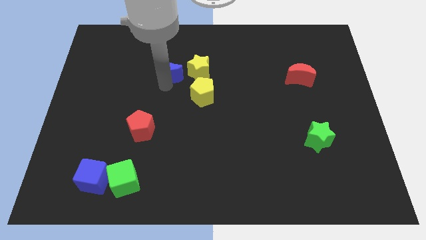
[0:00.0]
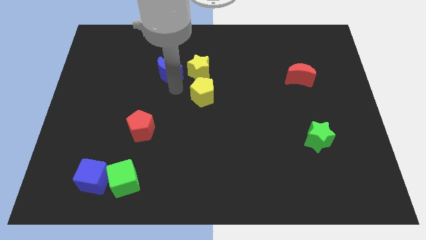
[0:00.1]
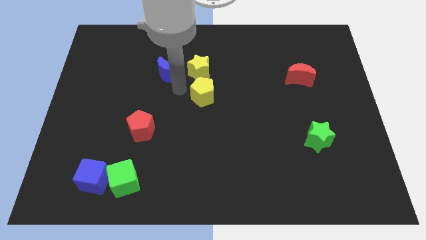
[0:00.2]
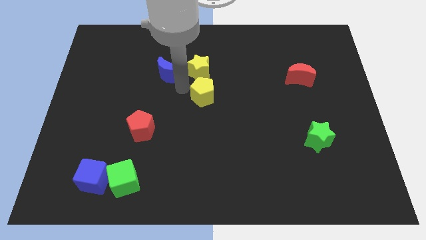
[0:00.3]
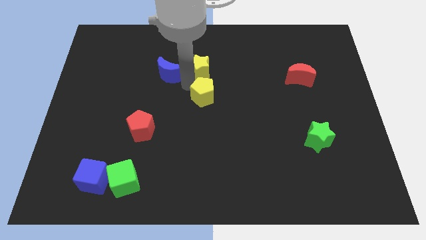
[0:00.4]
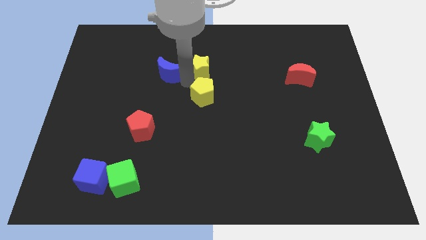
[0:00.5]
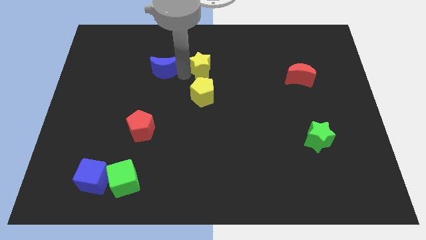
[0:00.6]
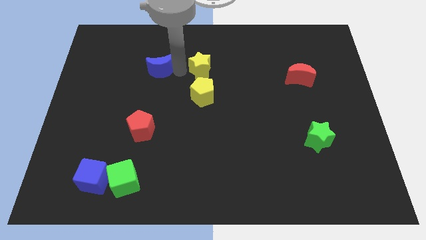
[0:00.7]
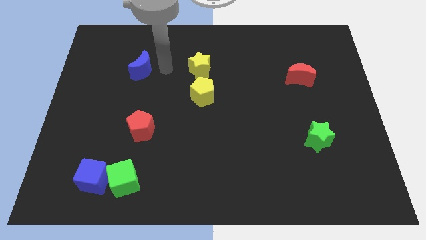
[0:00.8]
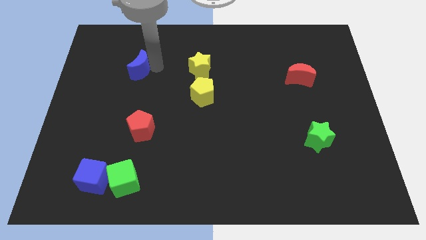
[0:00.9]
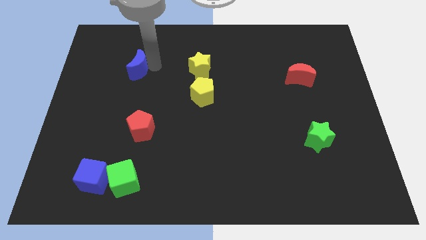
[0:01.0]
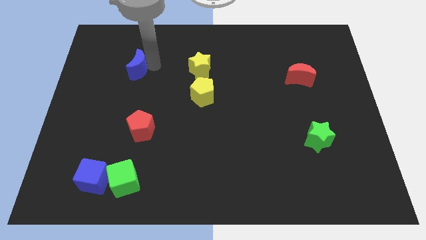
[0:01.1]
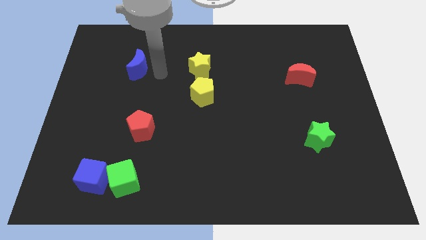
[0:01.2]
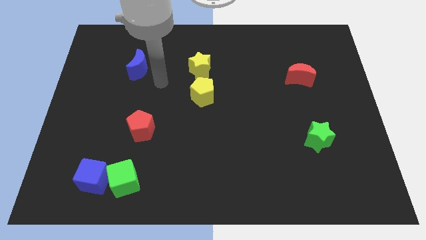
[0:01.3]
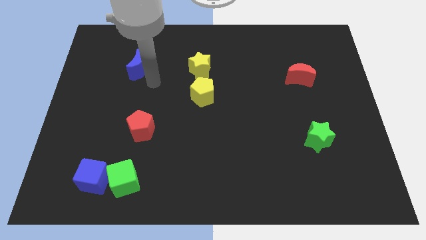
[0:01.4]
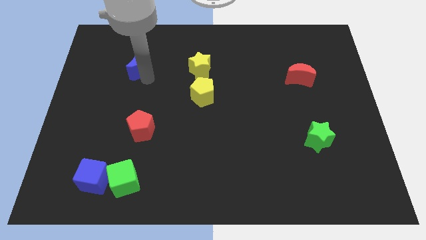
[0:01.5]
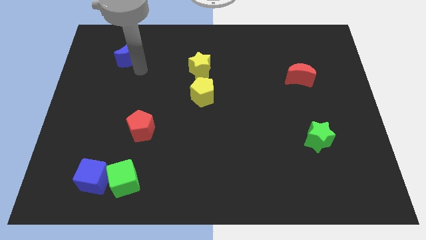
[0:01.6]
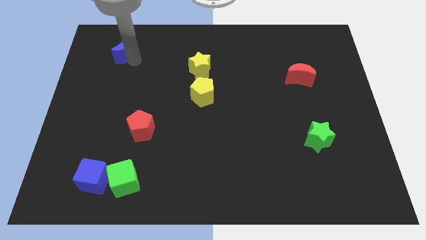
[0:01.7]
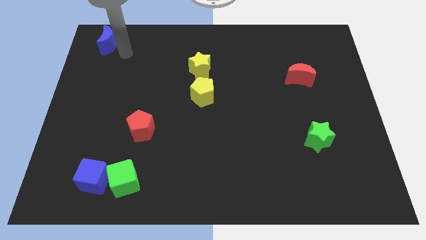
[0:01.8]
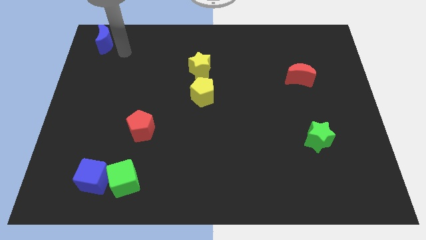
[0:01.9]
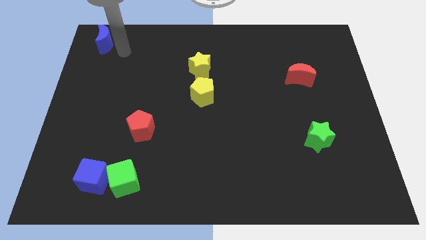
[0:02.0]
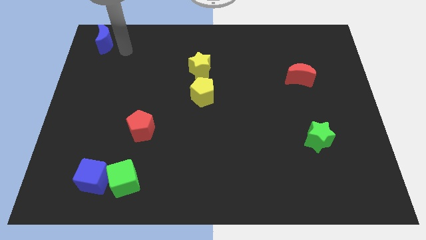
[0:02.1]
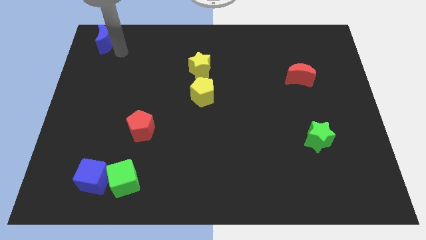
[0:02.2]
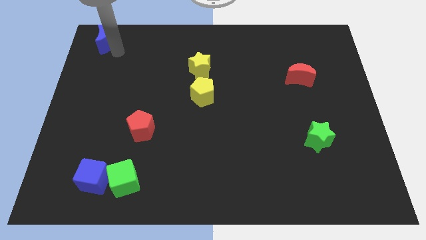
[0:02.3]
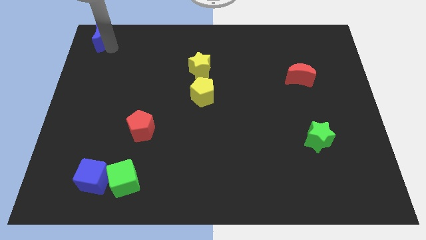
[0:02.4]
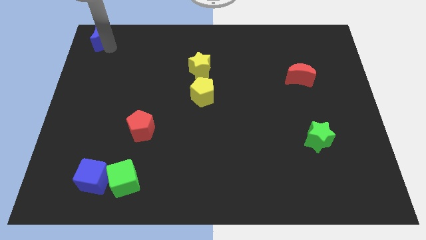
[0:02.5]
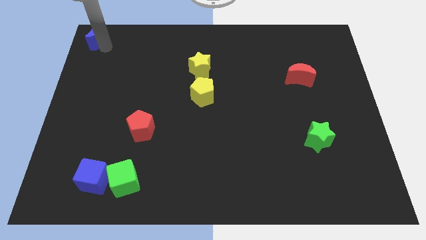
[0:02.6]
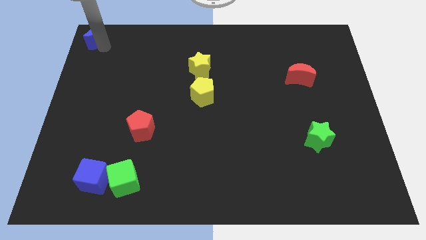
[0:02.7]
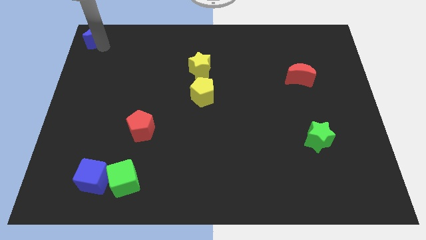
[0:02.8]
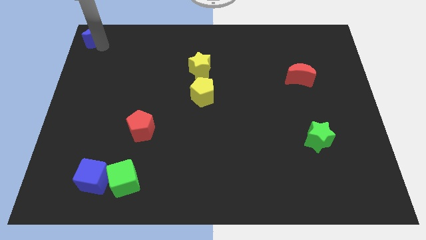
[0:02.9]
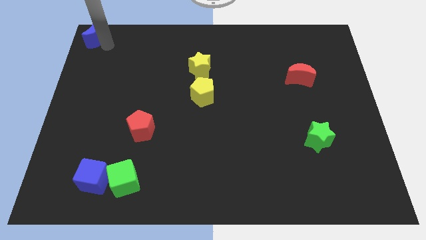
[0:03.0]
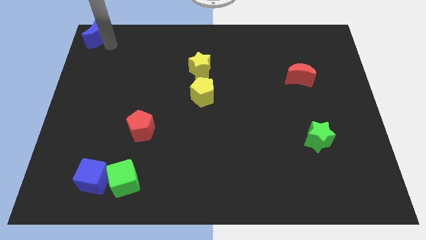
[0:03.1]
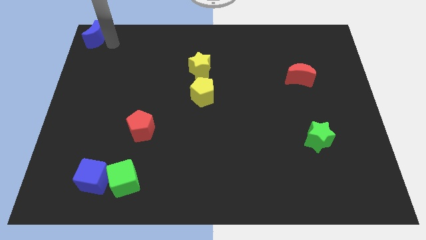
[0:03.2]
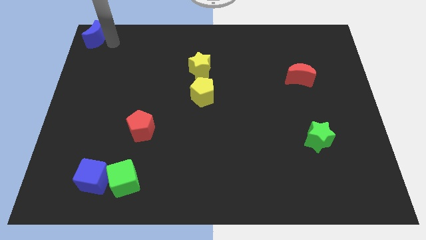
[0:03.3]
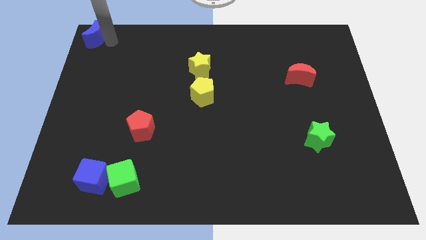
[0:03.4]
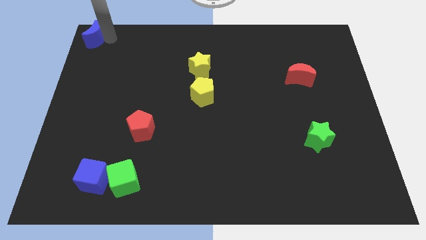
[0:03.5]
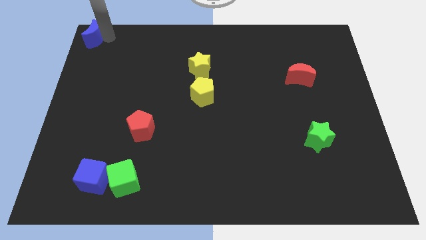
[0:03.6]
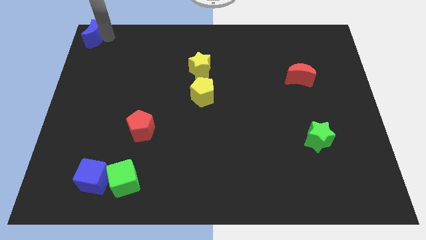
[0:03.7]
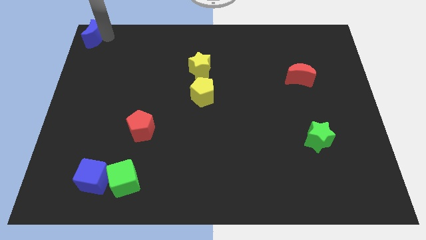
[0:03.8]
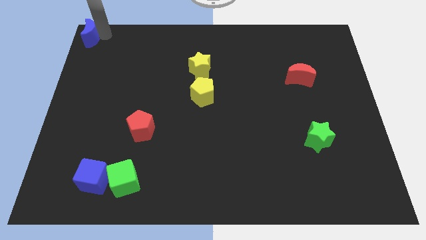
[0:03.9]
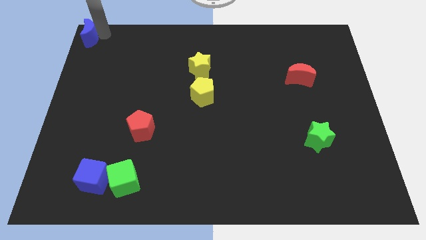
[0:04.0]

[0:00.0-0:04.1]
move the blue moon to the top left corner of the board

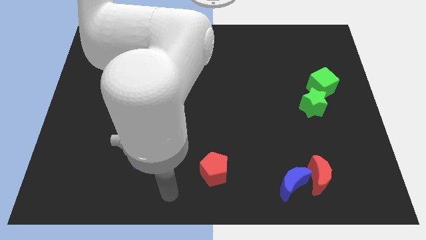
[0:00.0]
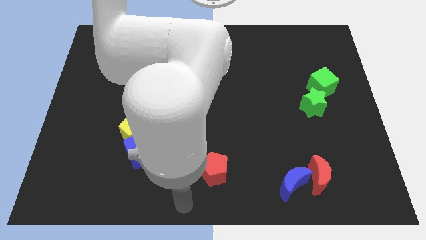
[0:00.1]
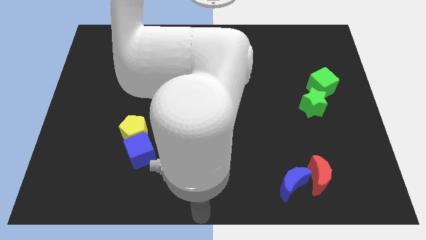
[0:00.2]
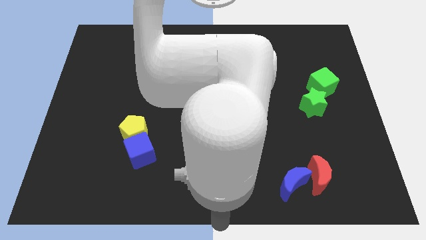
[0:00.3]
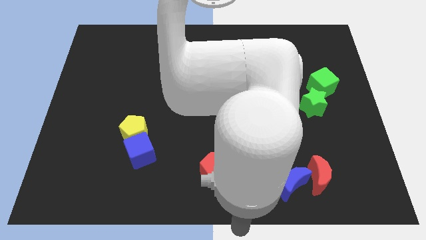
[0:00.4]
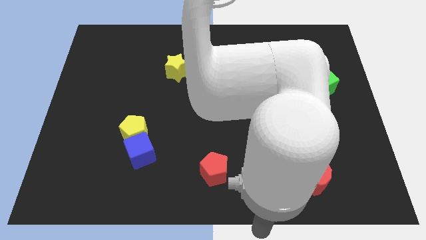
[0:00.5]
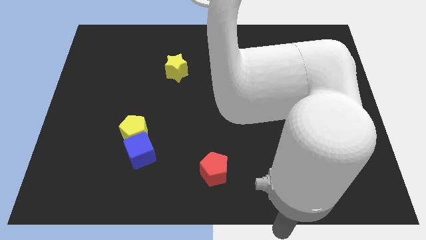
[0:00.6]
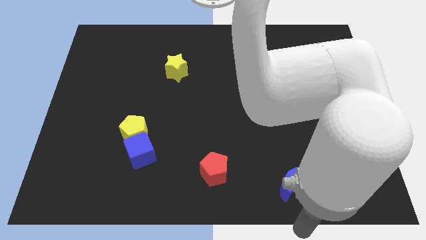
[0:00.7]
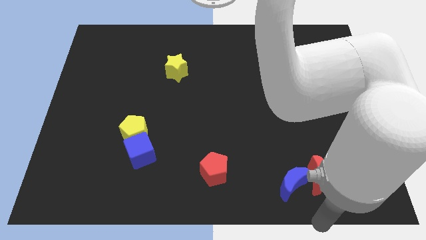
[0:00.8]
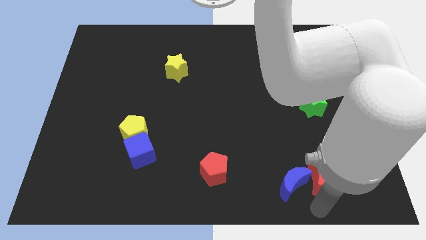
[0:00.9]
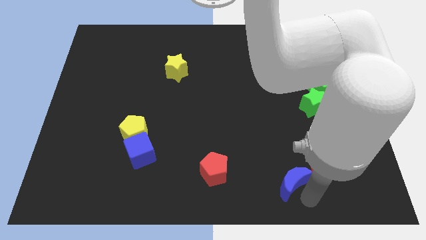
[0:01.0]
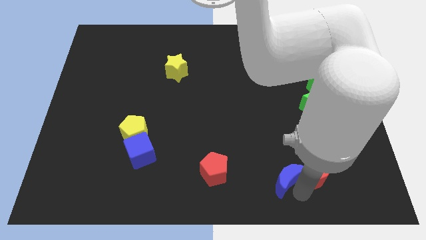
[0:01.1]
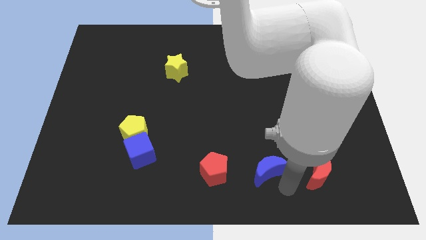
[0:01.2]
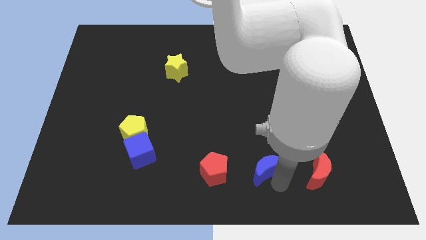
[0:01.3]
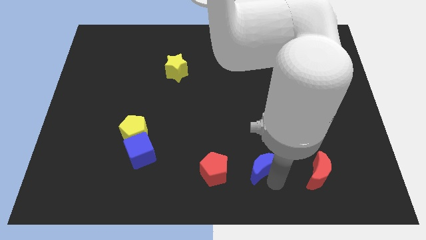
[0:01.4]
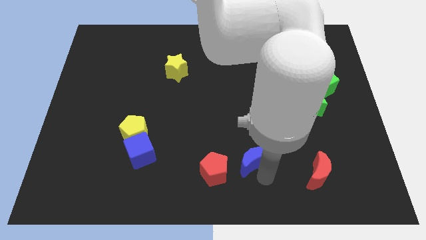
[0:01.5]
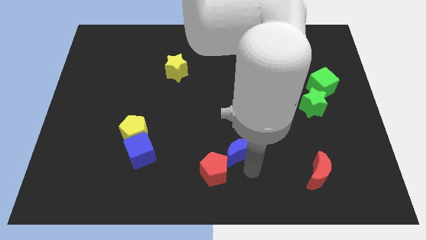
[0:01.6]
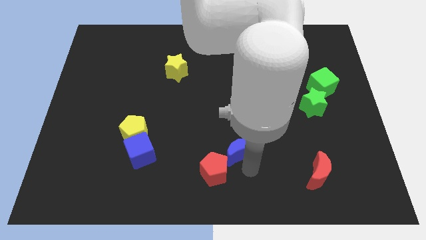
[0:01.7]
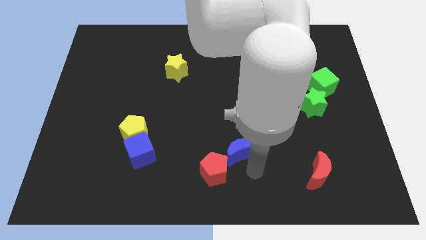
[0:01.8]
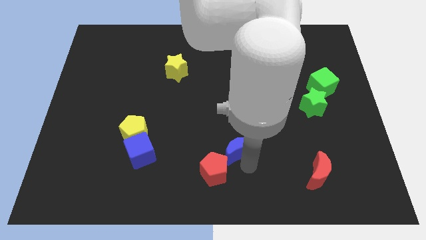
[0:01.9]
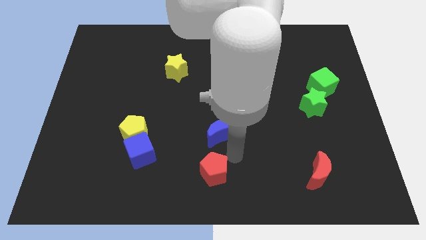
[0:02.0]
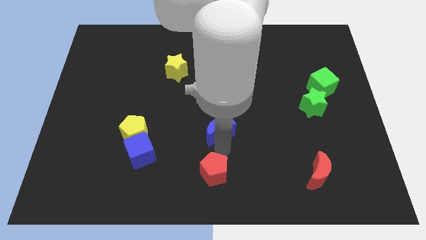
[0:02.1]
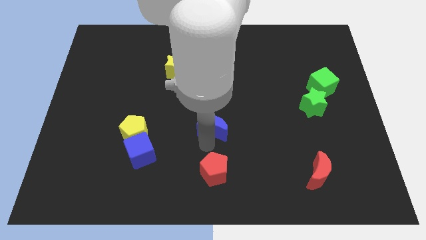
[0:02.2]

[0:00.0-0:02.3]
push the blue crescent to the top of the red pentagon

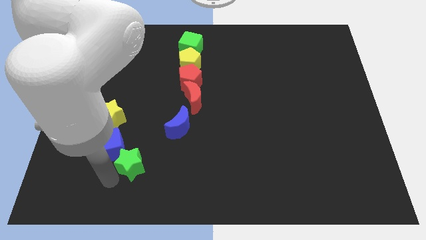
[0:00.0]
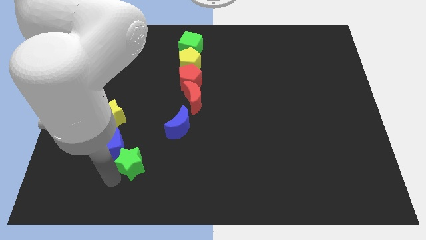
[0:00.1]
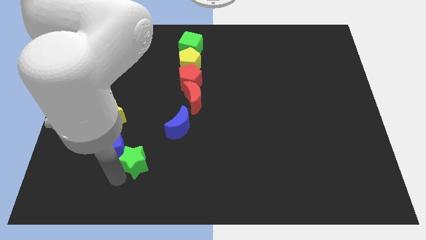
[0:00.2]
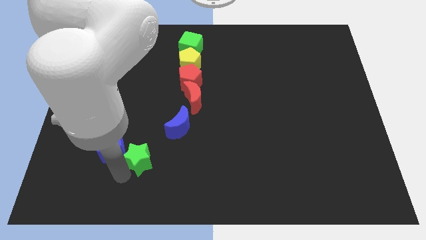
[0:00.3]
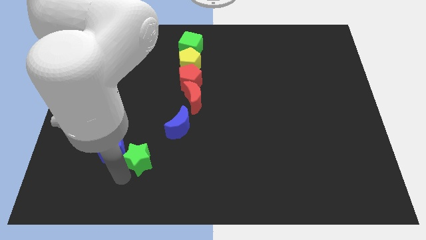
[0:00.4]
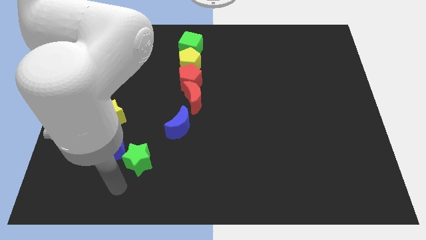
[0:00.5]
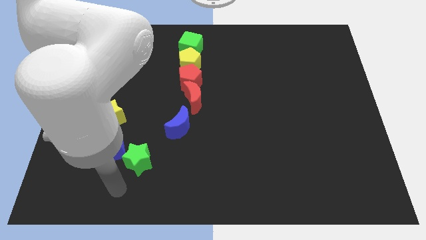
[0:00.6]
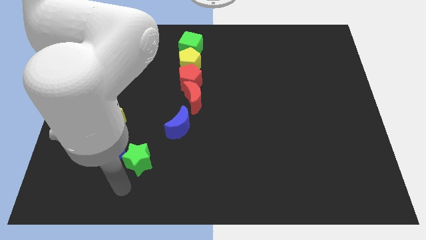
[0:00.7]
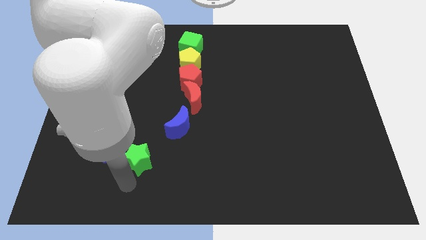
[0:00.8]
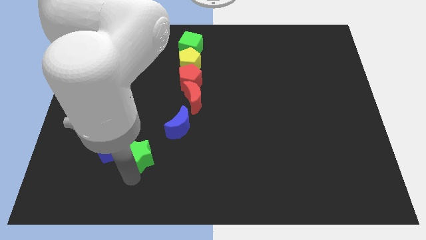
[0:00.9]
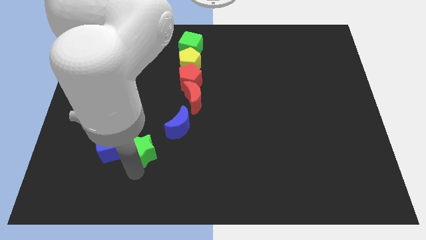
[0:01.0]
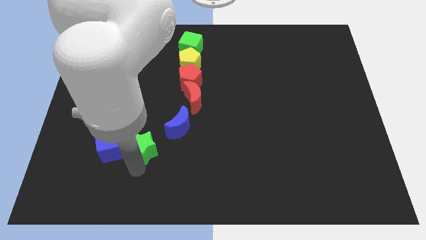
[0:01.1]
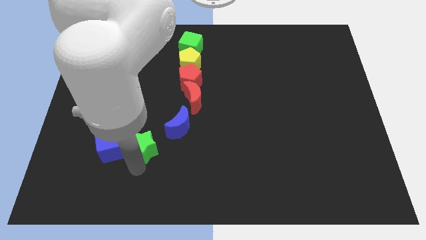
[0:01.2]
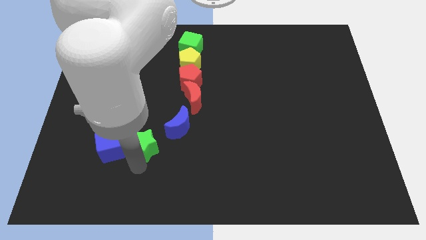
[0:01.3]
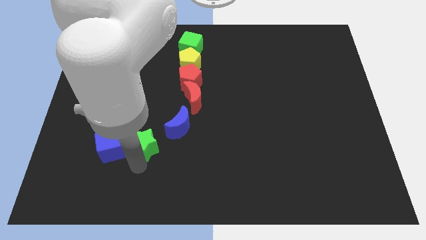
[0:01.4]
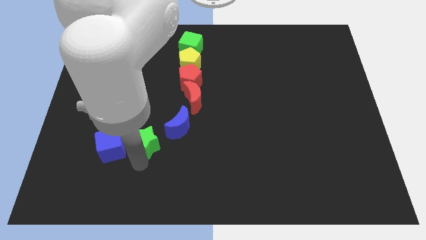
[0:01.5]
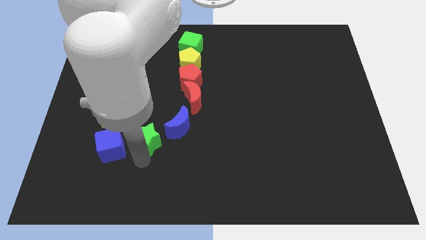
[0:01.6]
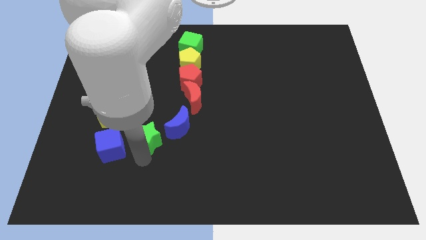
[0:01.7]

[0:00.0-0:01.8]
place green star to the right of blue cube

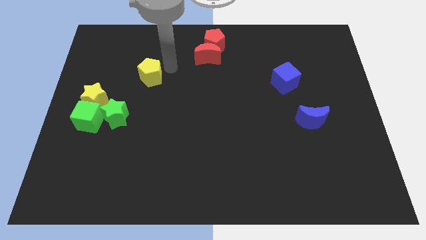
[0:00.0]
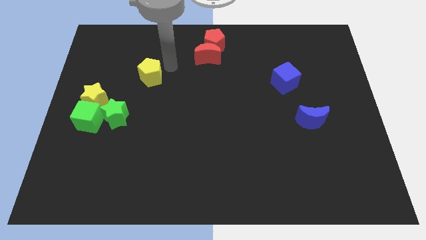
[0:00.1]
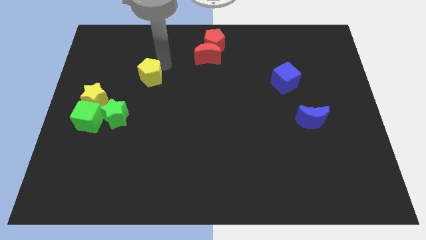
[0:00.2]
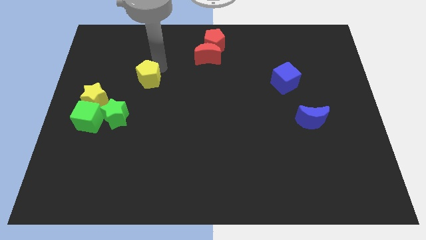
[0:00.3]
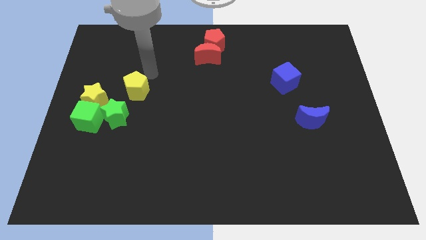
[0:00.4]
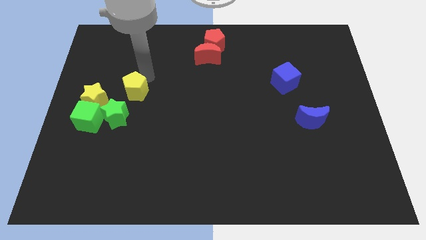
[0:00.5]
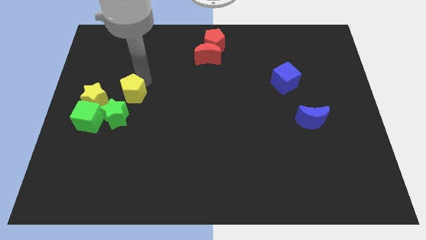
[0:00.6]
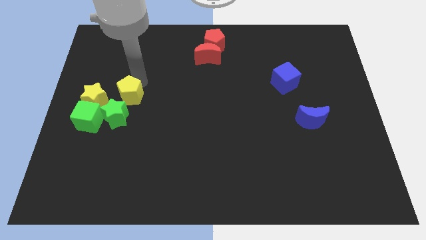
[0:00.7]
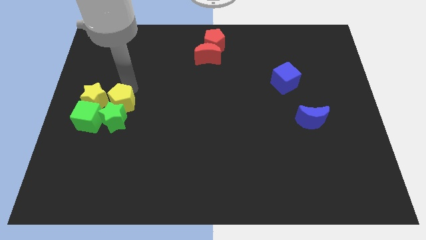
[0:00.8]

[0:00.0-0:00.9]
push the yellow pentagon to the top of the green star
